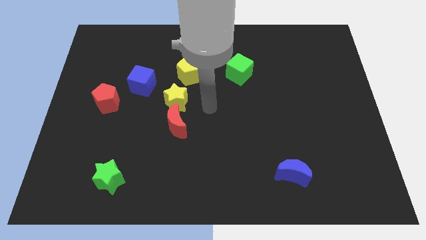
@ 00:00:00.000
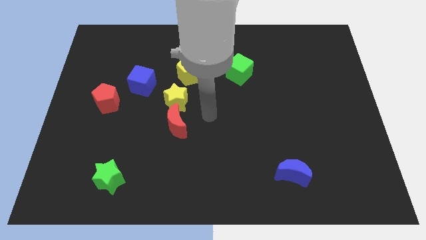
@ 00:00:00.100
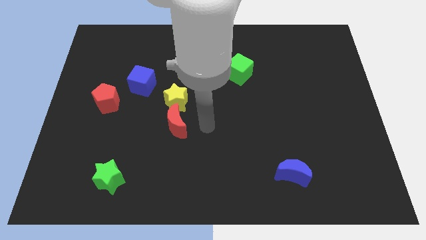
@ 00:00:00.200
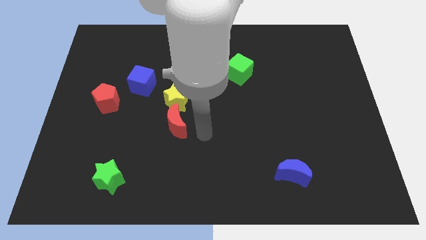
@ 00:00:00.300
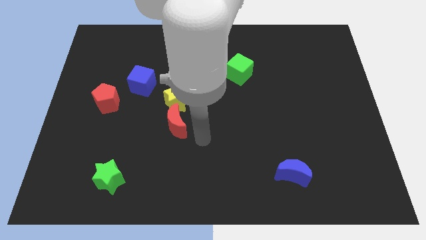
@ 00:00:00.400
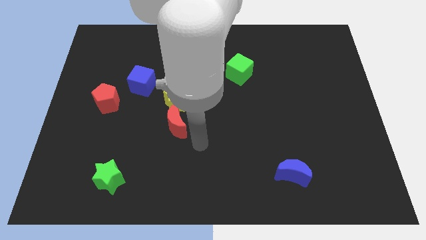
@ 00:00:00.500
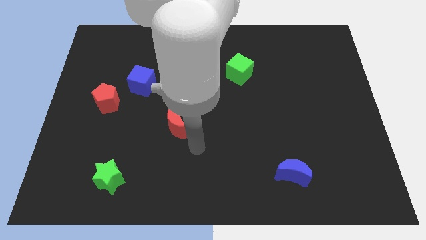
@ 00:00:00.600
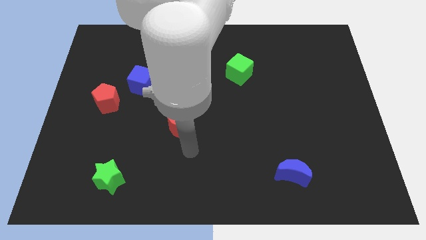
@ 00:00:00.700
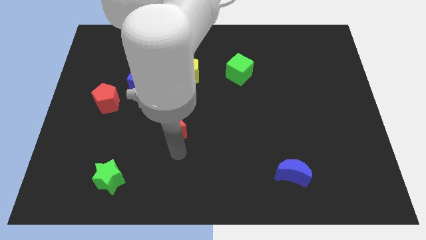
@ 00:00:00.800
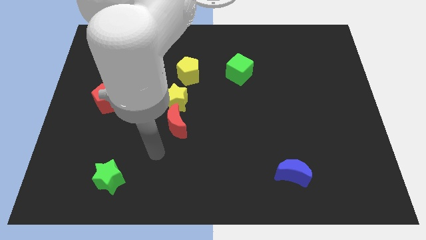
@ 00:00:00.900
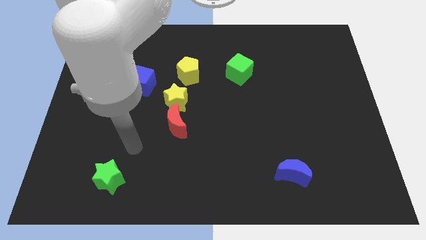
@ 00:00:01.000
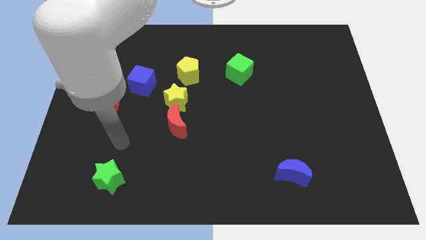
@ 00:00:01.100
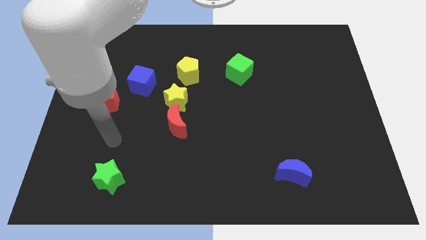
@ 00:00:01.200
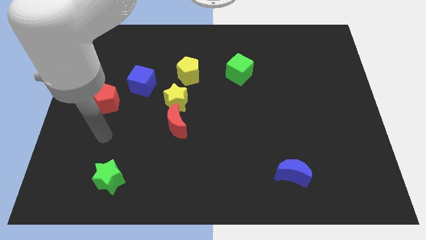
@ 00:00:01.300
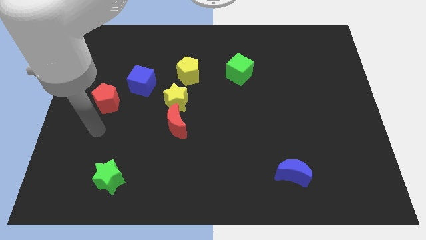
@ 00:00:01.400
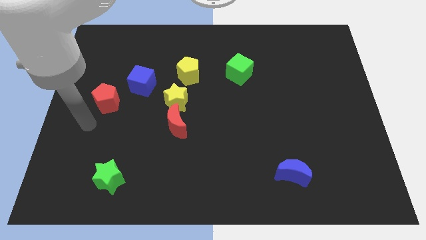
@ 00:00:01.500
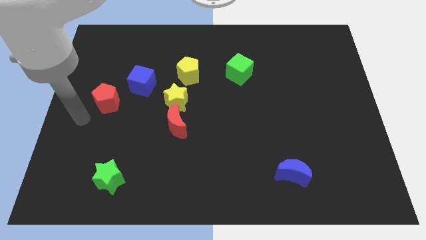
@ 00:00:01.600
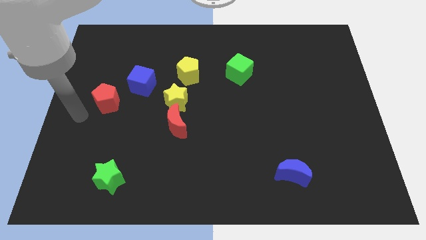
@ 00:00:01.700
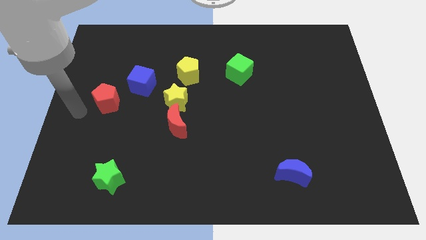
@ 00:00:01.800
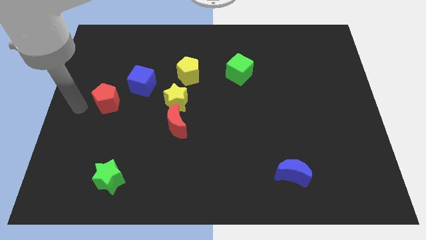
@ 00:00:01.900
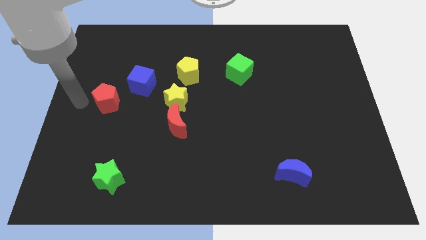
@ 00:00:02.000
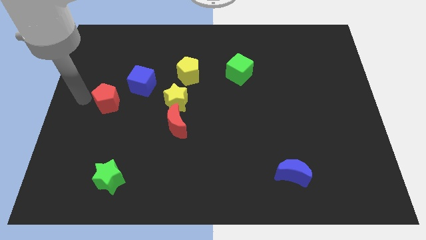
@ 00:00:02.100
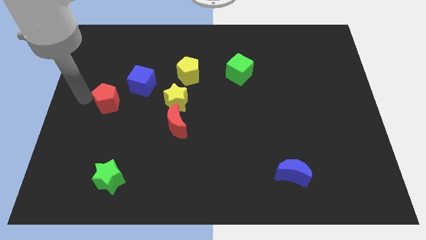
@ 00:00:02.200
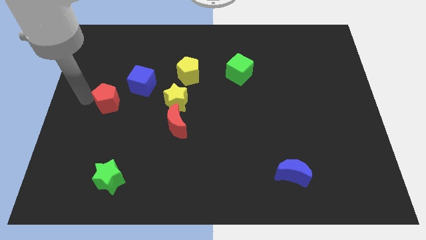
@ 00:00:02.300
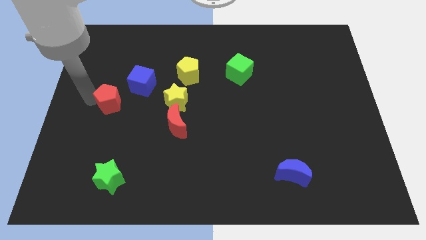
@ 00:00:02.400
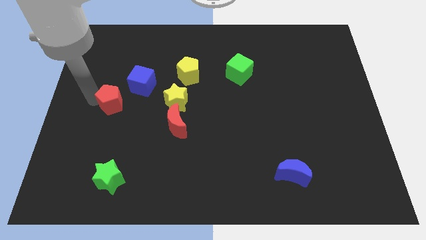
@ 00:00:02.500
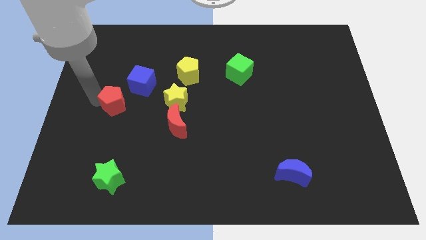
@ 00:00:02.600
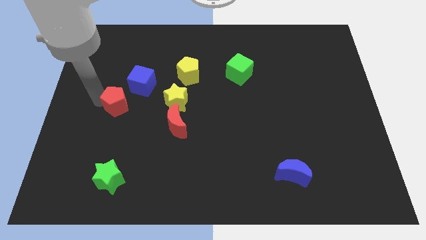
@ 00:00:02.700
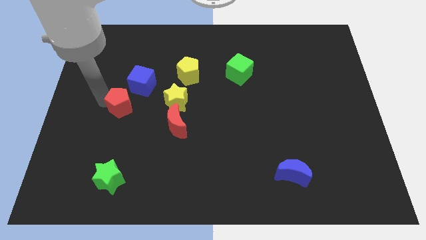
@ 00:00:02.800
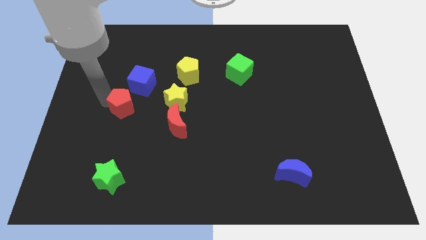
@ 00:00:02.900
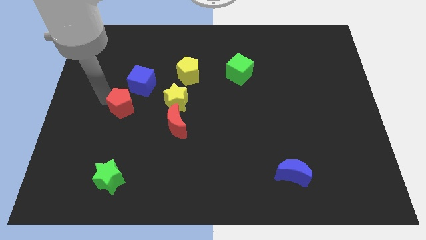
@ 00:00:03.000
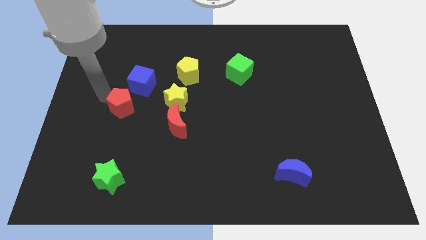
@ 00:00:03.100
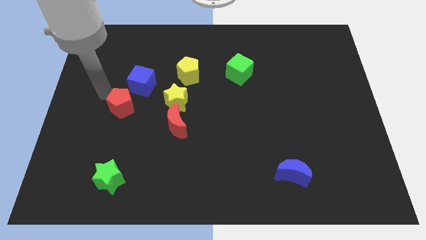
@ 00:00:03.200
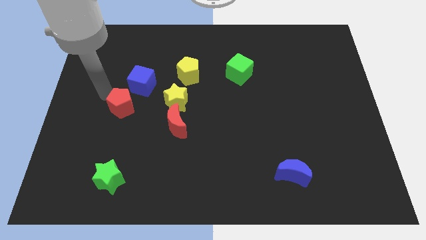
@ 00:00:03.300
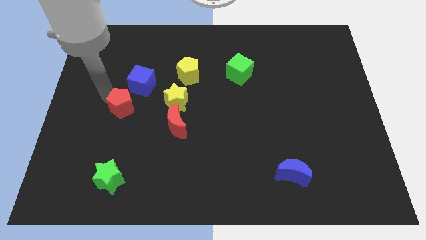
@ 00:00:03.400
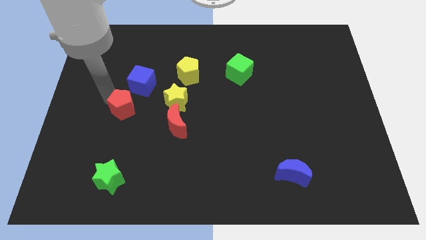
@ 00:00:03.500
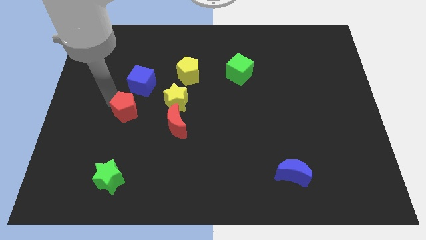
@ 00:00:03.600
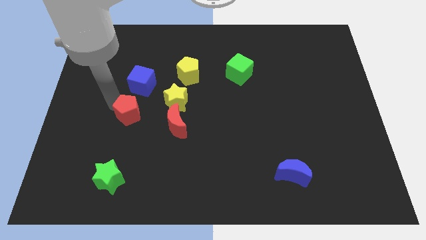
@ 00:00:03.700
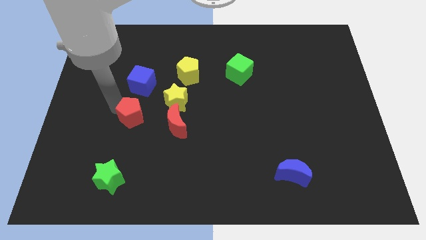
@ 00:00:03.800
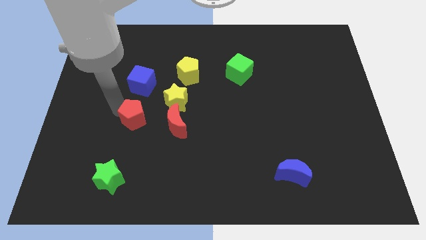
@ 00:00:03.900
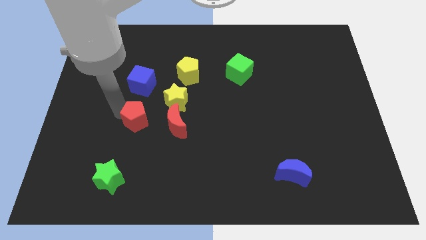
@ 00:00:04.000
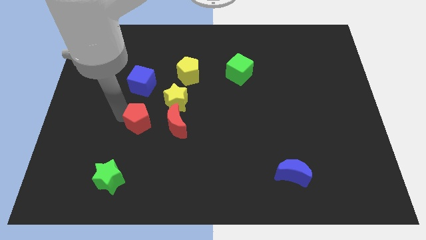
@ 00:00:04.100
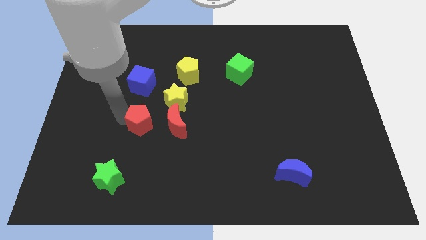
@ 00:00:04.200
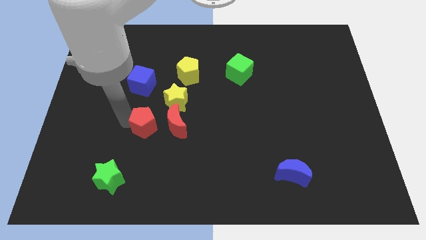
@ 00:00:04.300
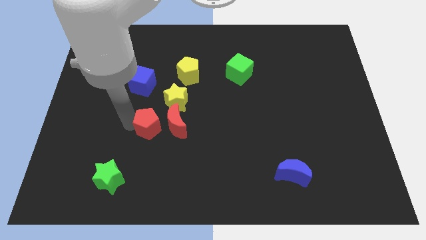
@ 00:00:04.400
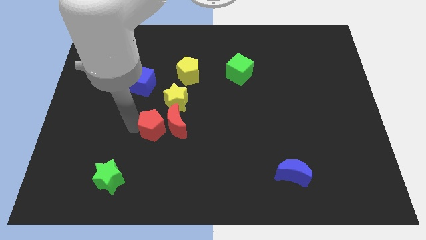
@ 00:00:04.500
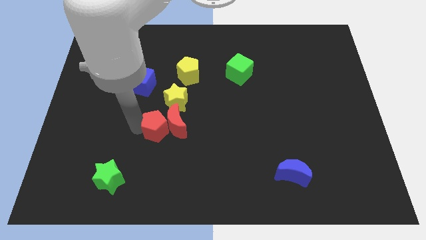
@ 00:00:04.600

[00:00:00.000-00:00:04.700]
put the red pentagon to the red moon

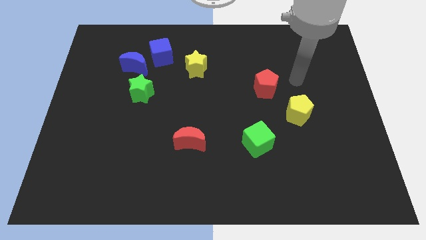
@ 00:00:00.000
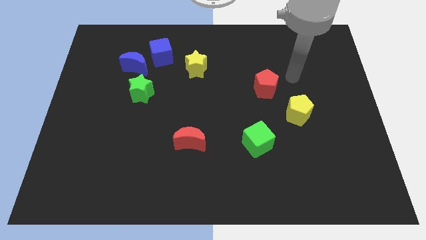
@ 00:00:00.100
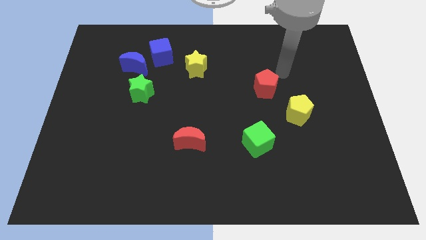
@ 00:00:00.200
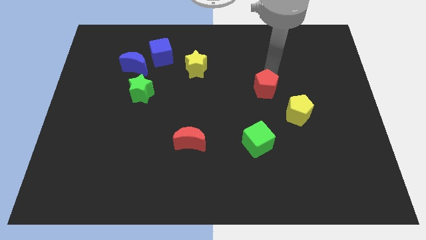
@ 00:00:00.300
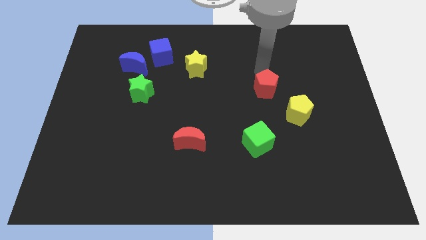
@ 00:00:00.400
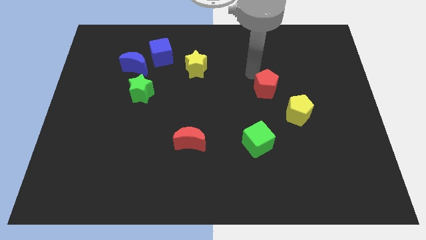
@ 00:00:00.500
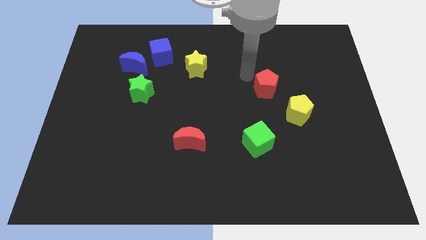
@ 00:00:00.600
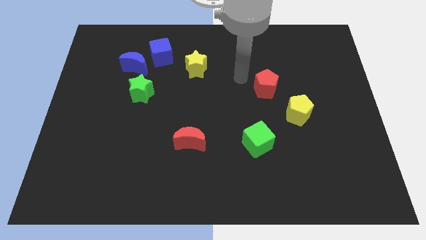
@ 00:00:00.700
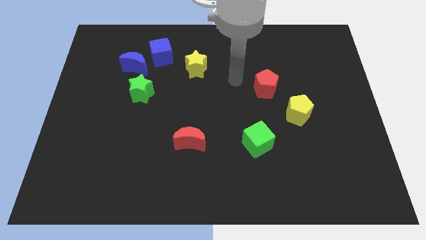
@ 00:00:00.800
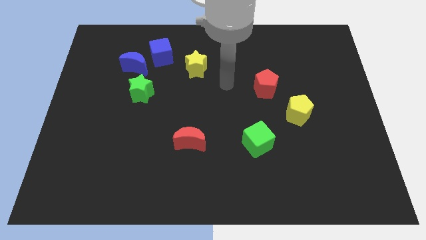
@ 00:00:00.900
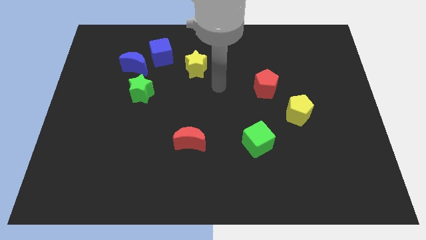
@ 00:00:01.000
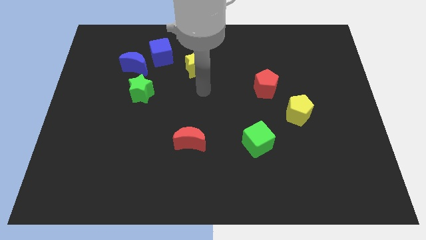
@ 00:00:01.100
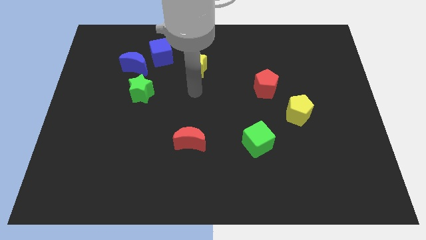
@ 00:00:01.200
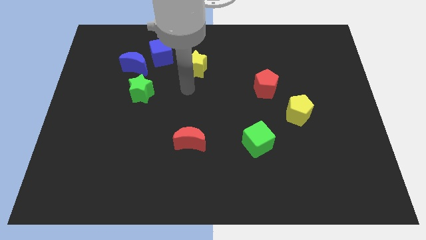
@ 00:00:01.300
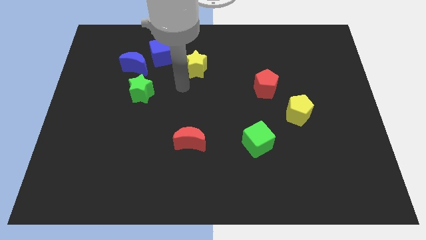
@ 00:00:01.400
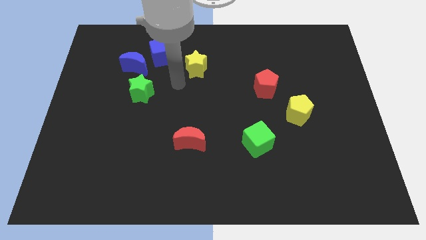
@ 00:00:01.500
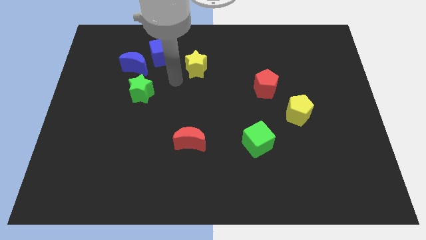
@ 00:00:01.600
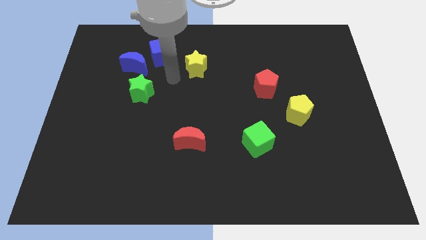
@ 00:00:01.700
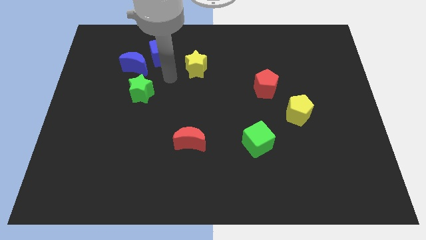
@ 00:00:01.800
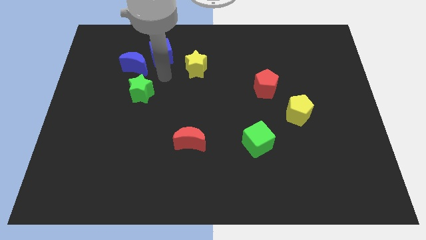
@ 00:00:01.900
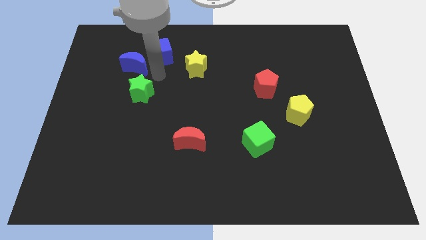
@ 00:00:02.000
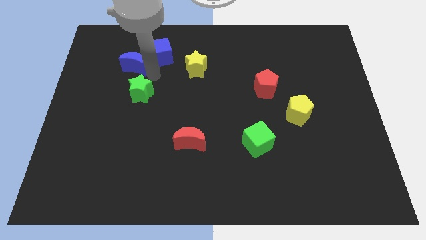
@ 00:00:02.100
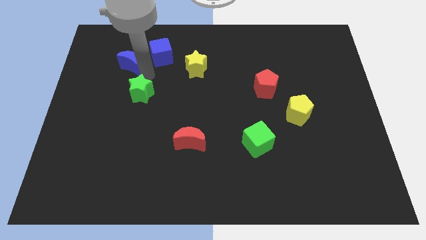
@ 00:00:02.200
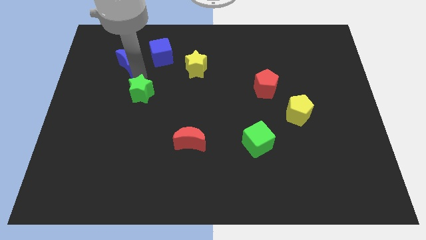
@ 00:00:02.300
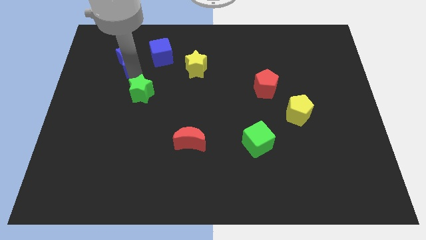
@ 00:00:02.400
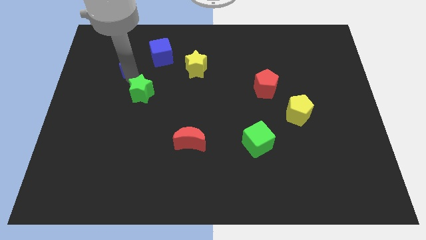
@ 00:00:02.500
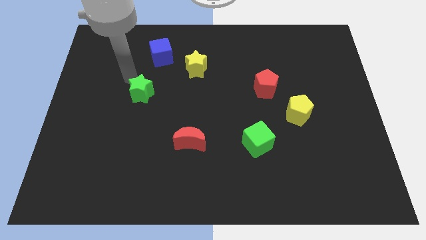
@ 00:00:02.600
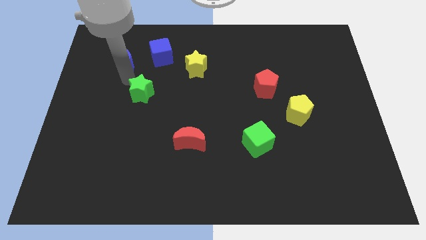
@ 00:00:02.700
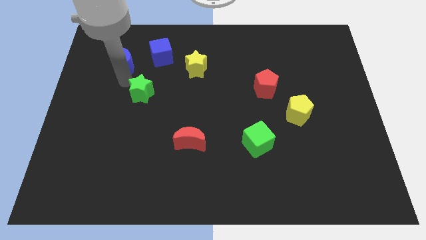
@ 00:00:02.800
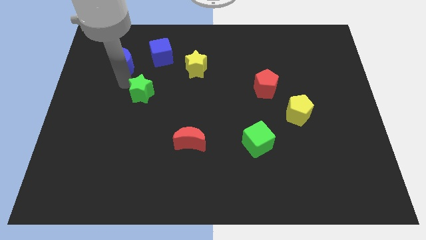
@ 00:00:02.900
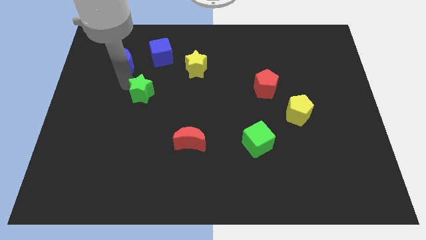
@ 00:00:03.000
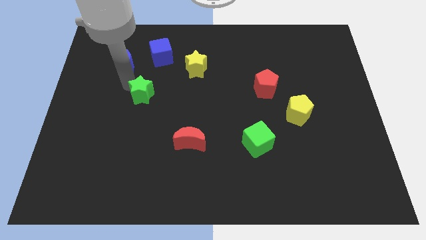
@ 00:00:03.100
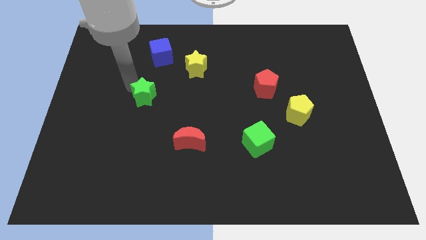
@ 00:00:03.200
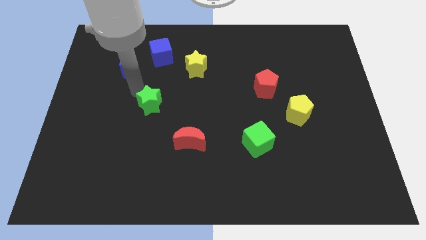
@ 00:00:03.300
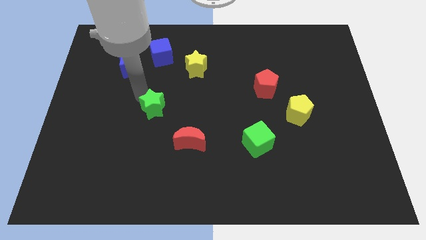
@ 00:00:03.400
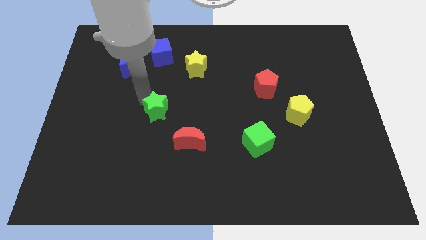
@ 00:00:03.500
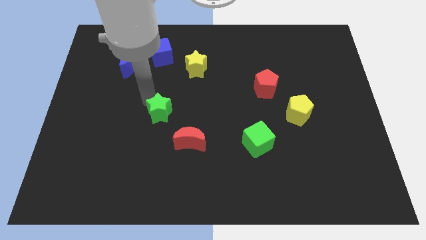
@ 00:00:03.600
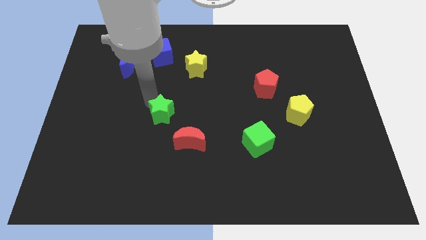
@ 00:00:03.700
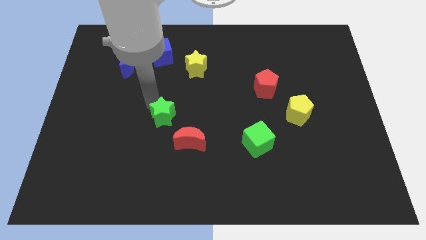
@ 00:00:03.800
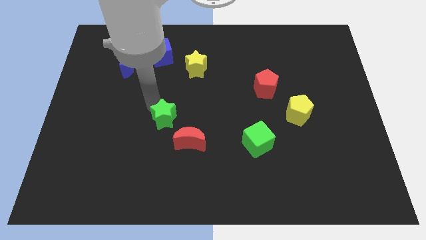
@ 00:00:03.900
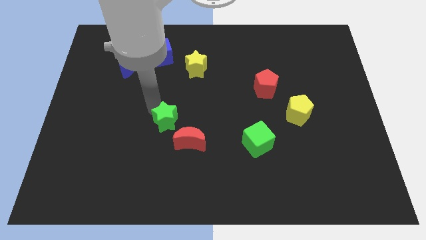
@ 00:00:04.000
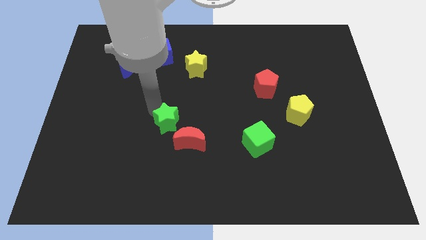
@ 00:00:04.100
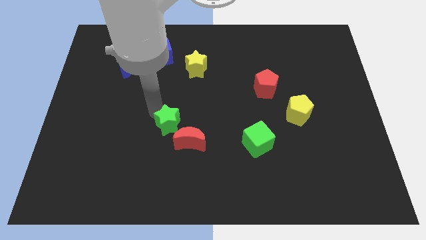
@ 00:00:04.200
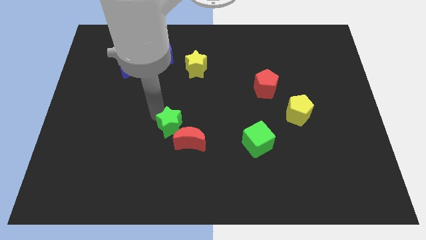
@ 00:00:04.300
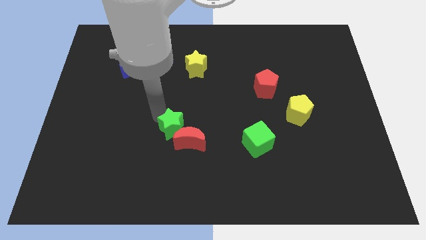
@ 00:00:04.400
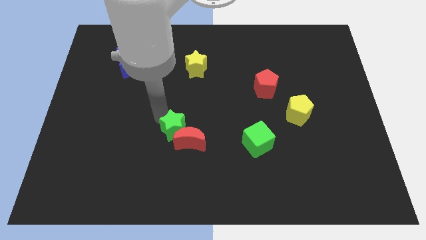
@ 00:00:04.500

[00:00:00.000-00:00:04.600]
put the green star towards the red moon
